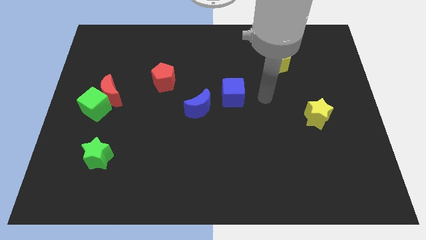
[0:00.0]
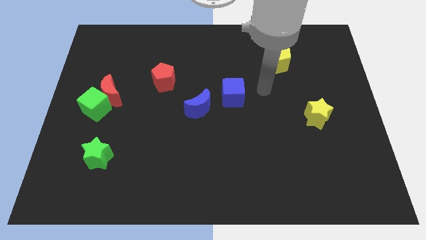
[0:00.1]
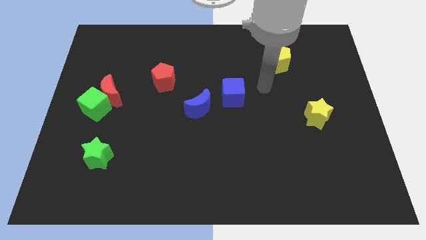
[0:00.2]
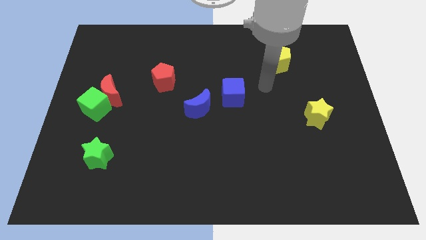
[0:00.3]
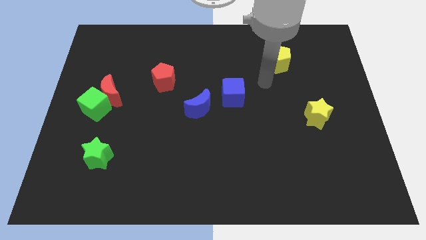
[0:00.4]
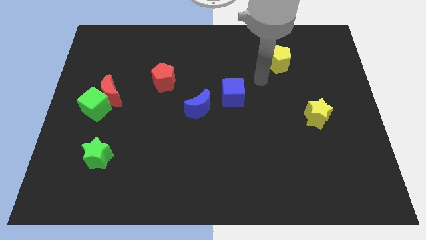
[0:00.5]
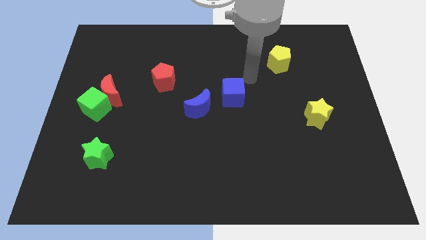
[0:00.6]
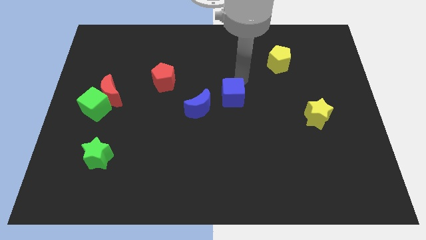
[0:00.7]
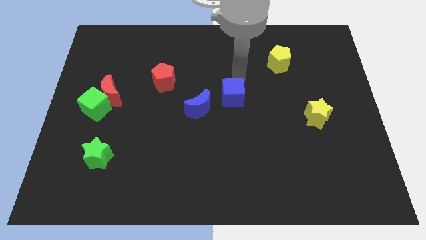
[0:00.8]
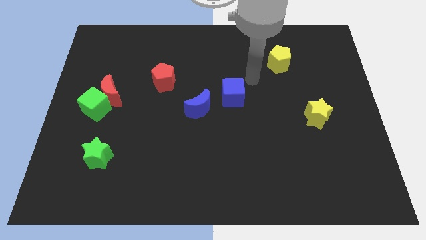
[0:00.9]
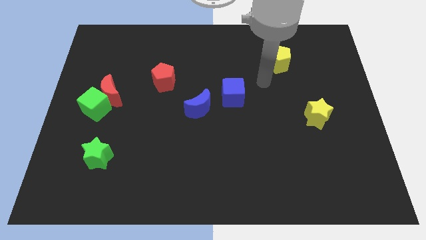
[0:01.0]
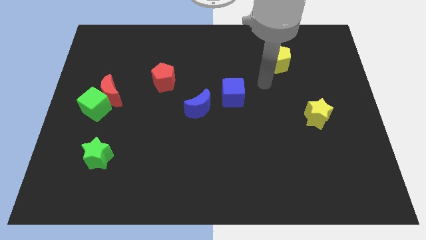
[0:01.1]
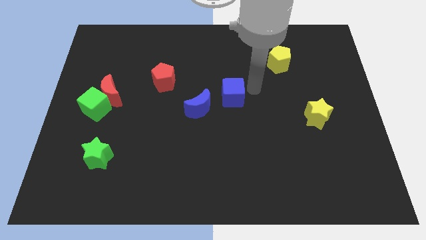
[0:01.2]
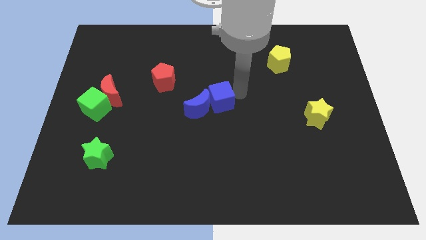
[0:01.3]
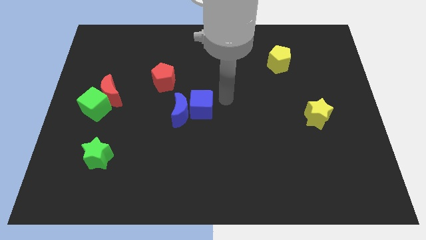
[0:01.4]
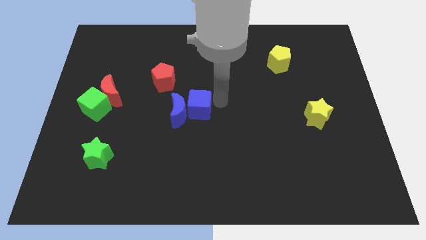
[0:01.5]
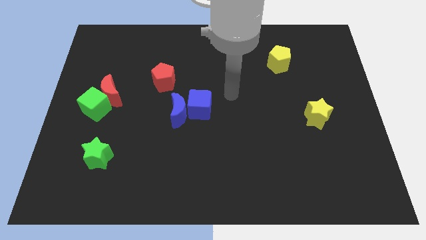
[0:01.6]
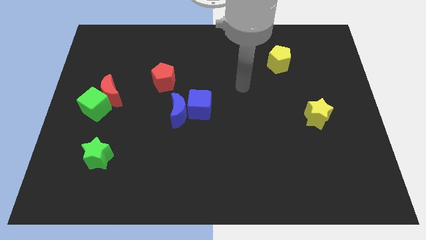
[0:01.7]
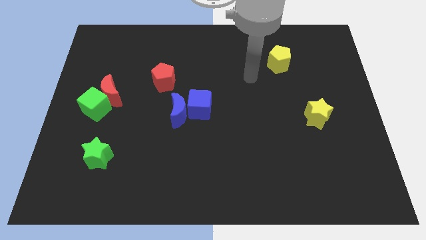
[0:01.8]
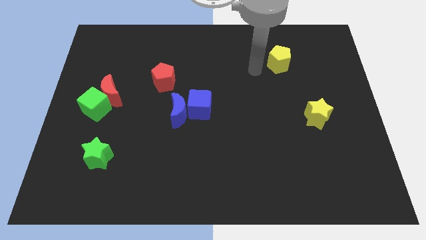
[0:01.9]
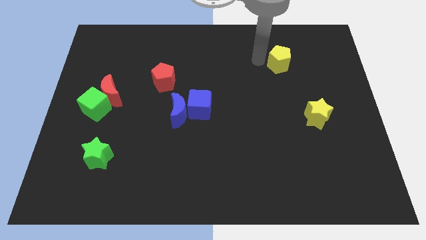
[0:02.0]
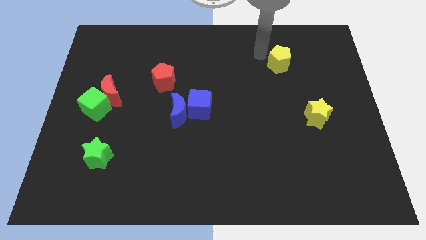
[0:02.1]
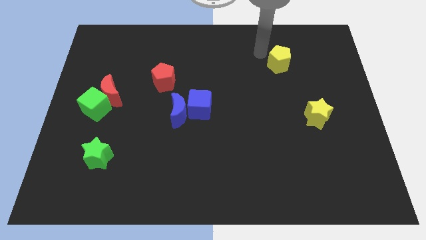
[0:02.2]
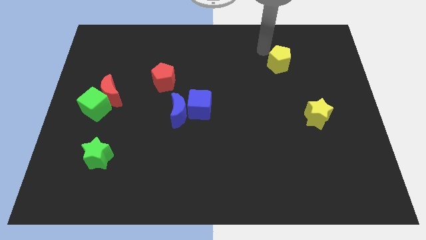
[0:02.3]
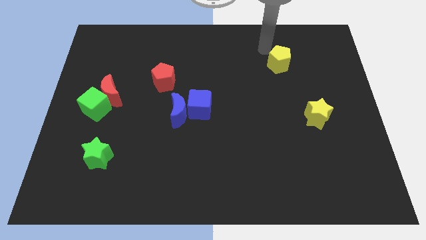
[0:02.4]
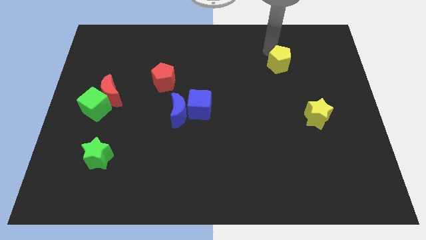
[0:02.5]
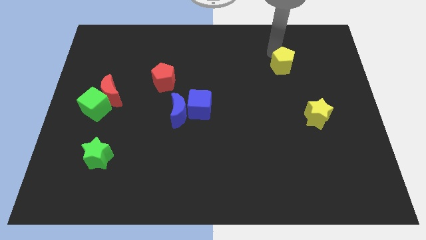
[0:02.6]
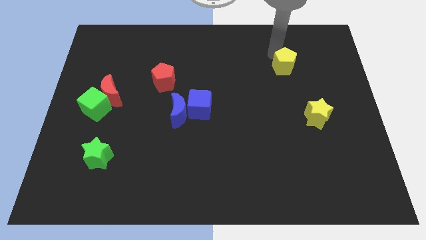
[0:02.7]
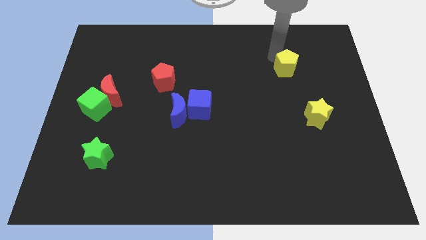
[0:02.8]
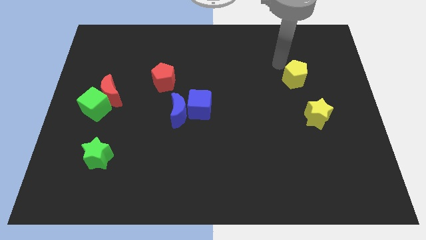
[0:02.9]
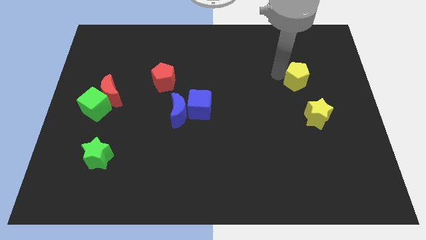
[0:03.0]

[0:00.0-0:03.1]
move the yellow pentagon slightly towards the bottom

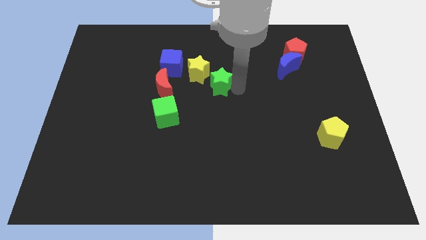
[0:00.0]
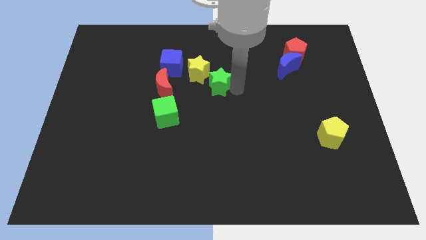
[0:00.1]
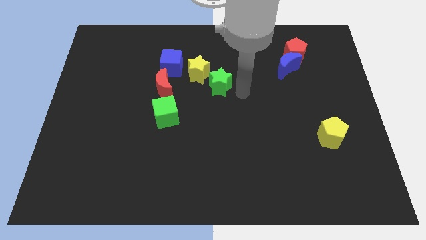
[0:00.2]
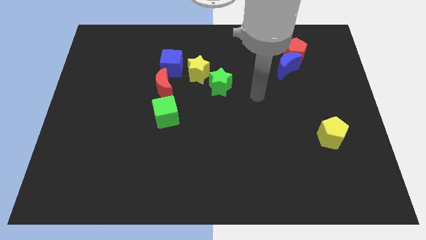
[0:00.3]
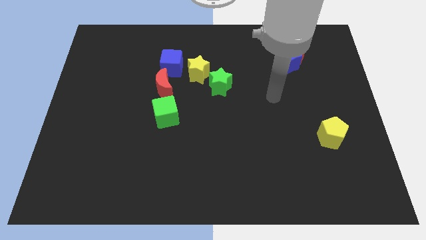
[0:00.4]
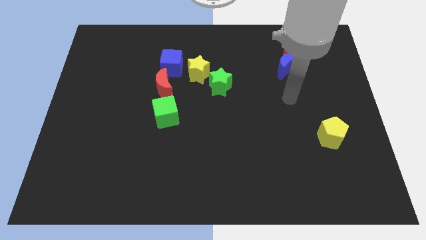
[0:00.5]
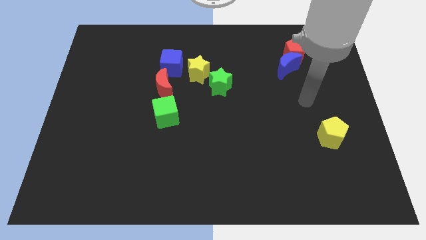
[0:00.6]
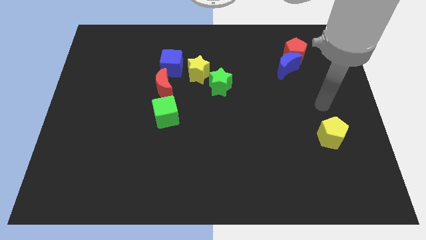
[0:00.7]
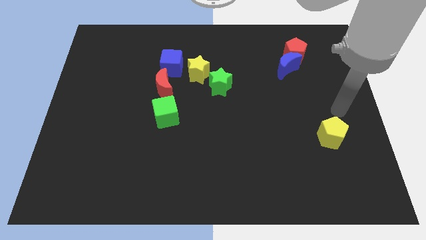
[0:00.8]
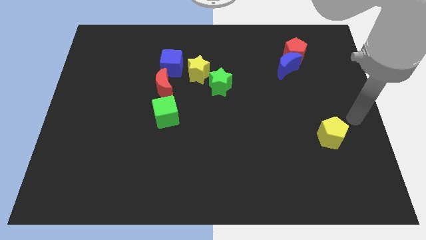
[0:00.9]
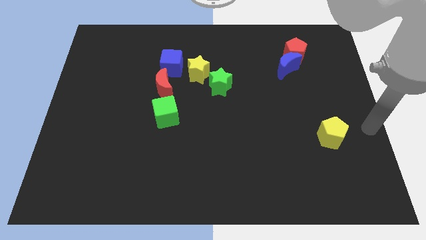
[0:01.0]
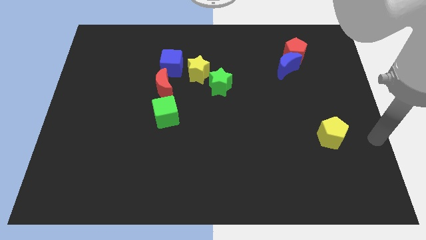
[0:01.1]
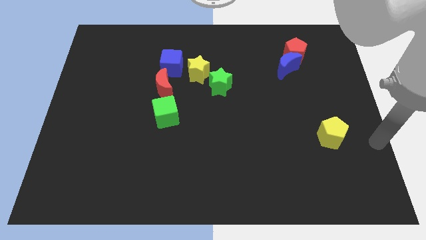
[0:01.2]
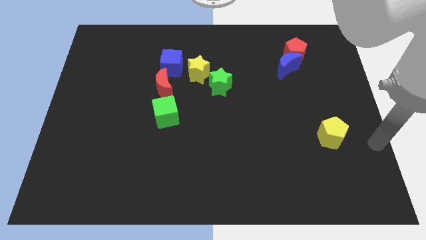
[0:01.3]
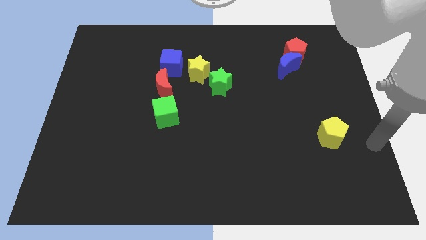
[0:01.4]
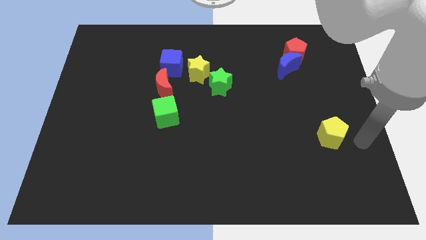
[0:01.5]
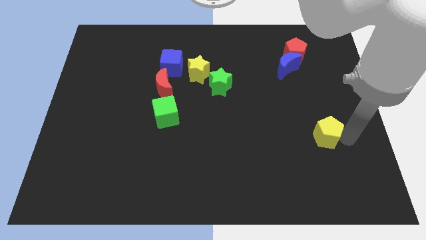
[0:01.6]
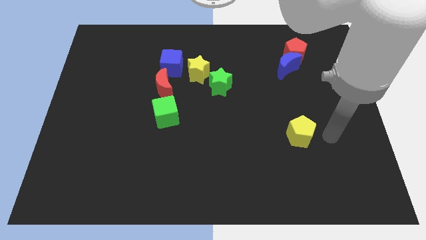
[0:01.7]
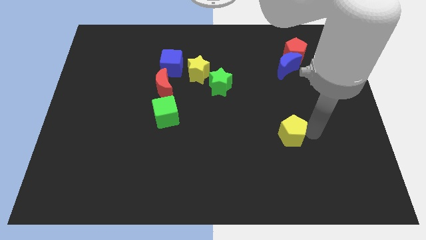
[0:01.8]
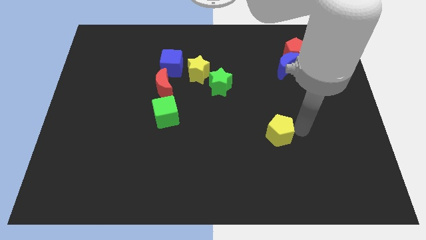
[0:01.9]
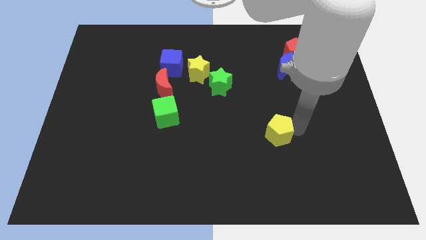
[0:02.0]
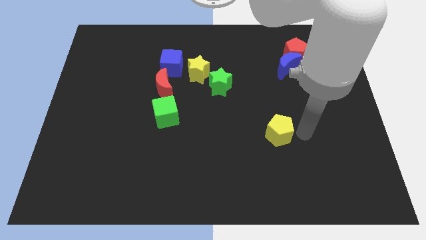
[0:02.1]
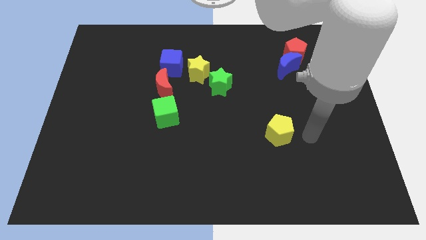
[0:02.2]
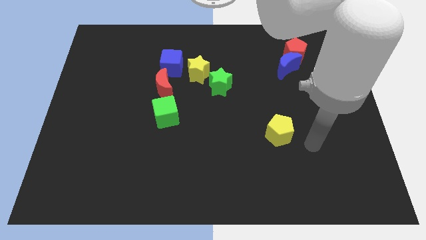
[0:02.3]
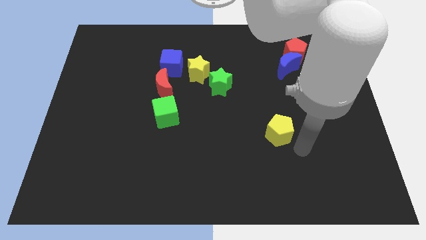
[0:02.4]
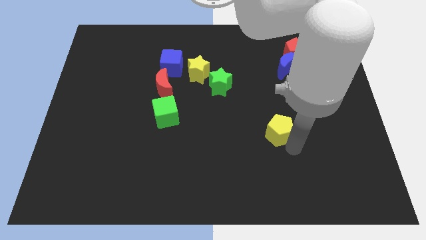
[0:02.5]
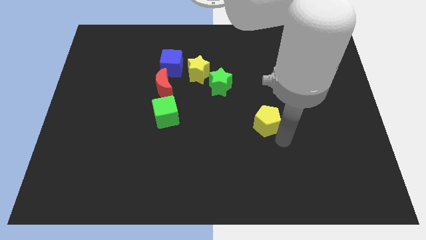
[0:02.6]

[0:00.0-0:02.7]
move the yellow pentagon towards the center of the board

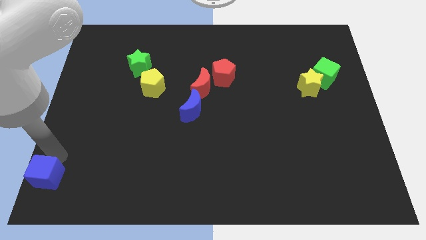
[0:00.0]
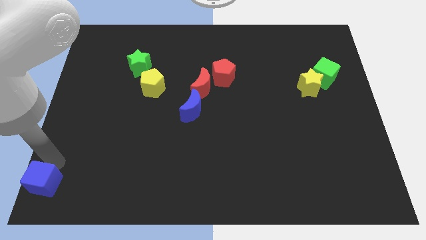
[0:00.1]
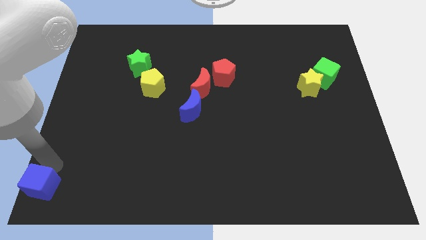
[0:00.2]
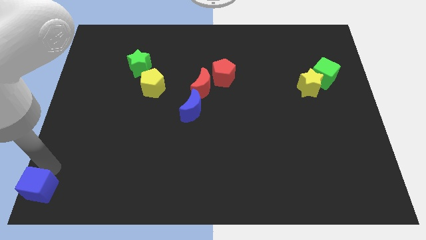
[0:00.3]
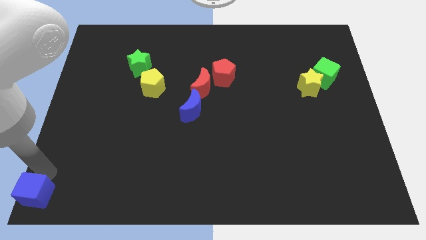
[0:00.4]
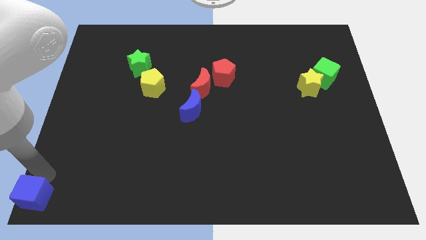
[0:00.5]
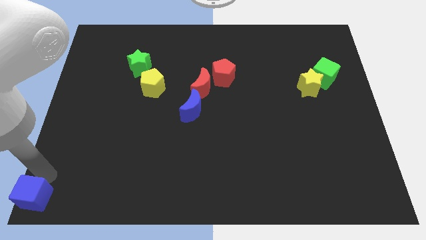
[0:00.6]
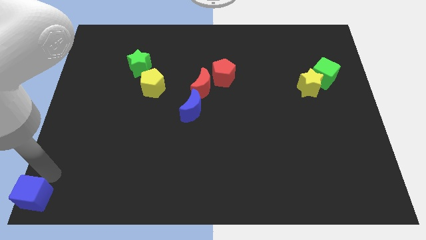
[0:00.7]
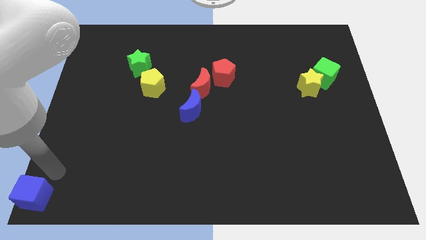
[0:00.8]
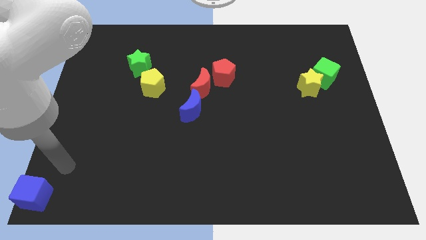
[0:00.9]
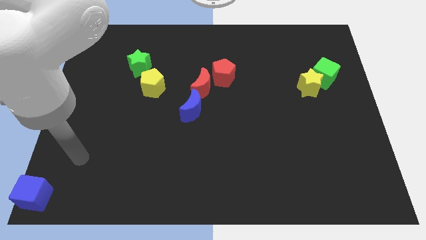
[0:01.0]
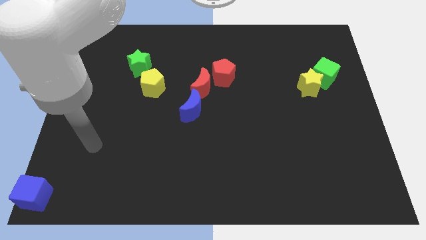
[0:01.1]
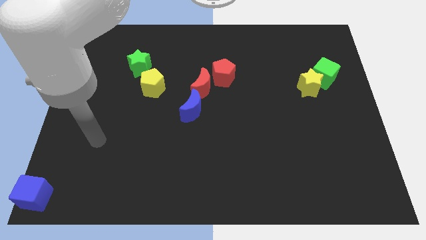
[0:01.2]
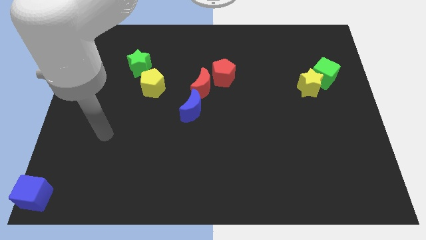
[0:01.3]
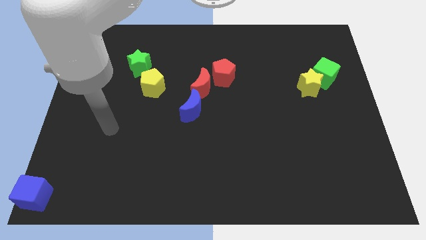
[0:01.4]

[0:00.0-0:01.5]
place the blue cube at the bottom left corner of the board

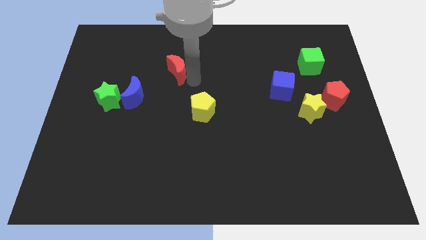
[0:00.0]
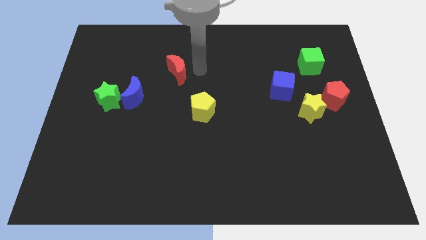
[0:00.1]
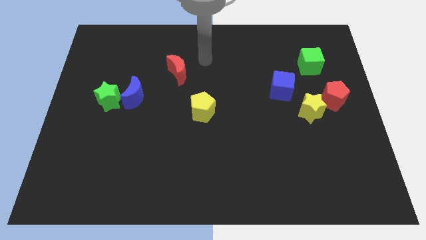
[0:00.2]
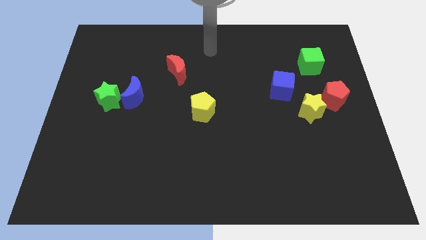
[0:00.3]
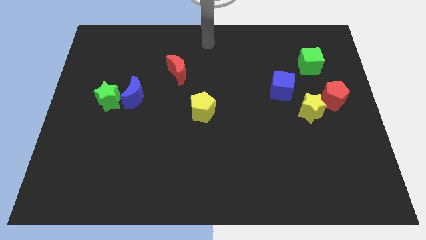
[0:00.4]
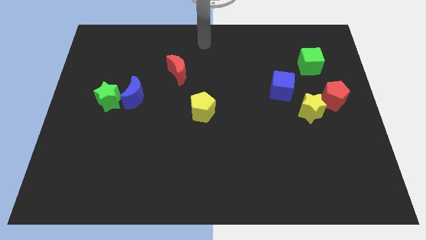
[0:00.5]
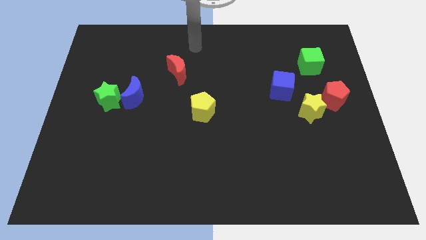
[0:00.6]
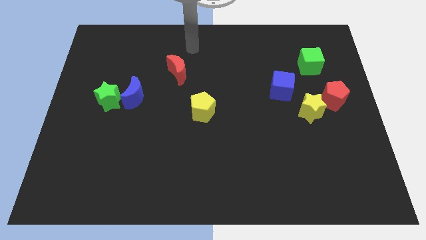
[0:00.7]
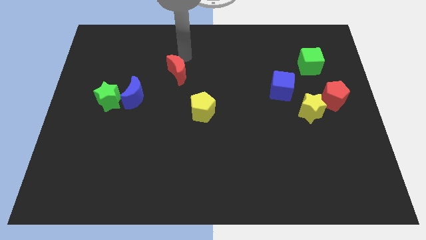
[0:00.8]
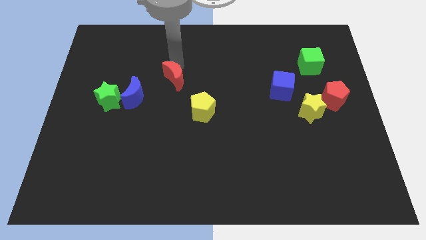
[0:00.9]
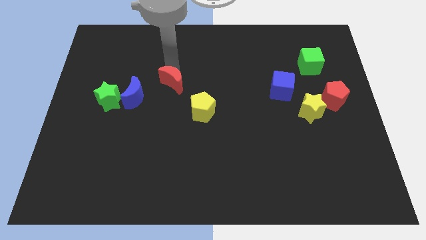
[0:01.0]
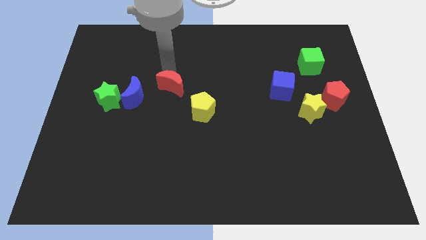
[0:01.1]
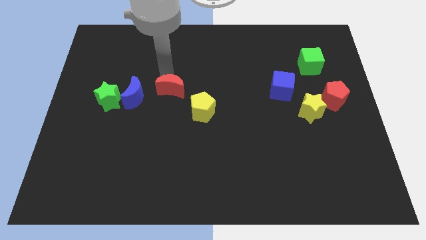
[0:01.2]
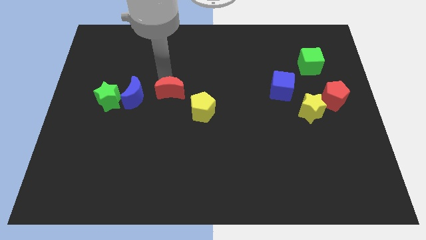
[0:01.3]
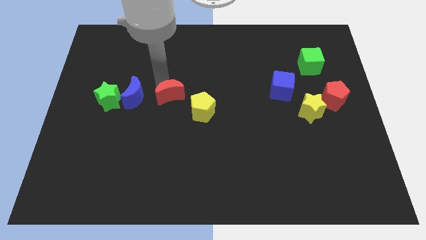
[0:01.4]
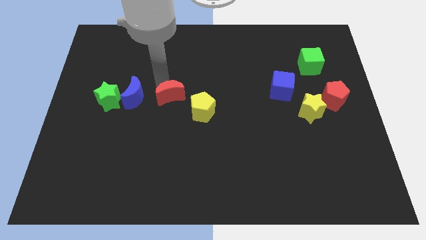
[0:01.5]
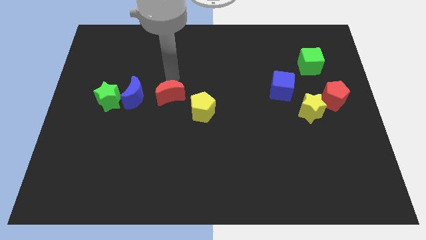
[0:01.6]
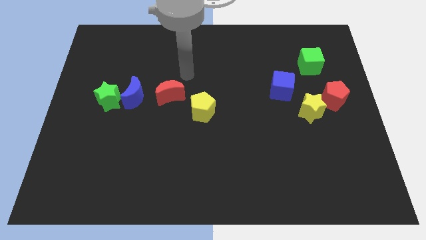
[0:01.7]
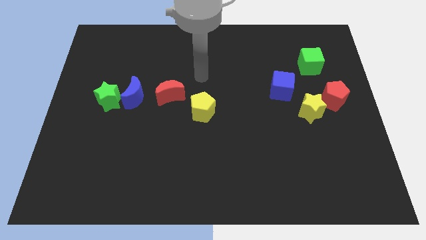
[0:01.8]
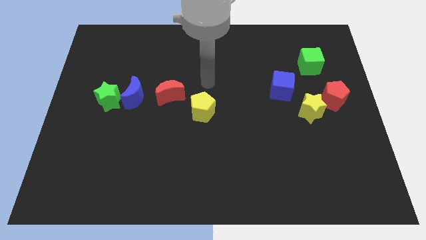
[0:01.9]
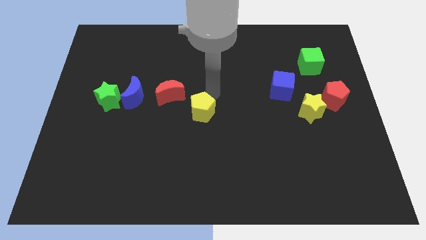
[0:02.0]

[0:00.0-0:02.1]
place red moon to the right of blue moon
